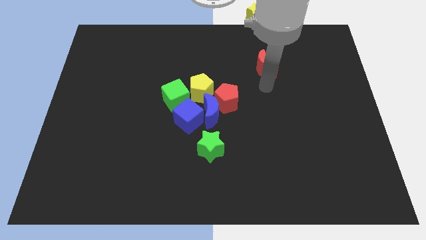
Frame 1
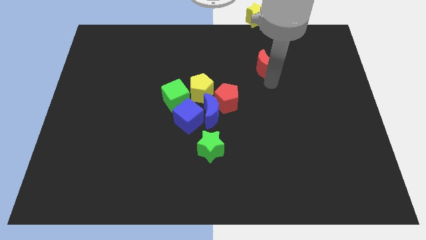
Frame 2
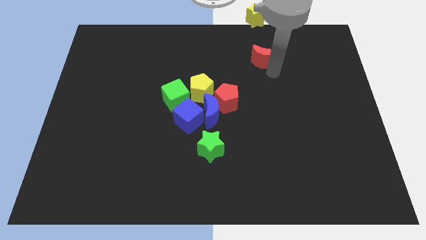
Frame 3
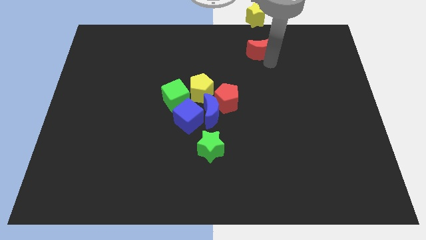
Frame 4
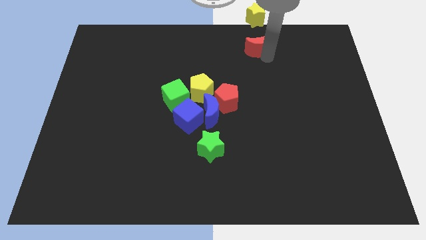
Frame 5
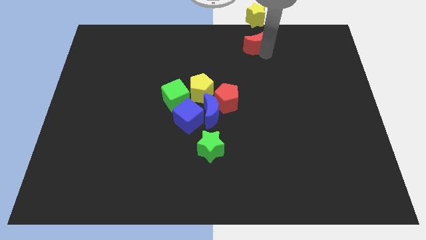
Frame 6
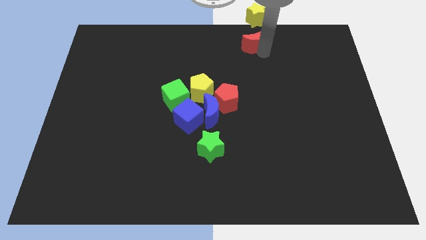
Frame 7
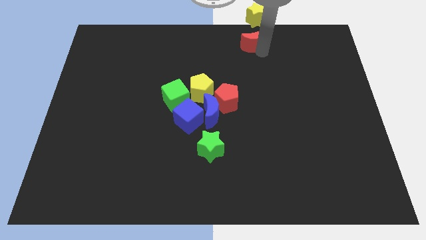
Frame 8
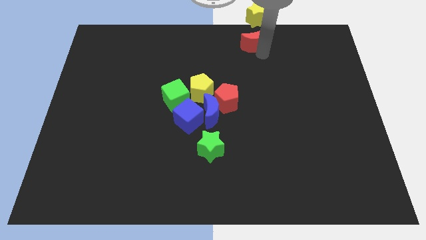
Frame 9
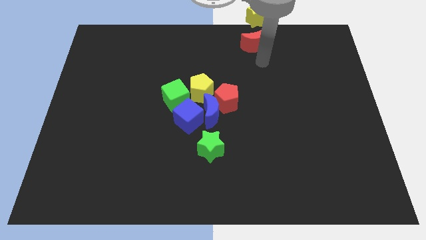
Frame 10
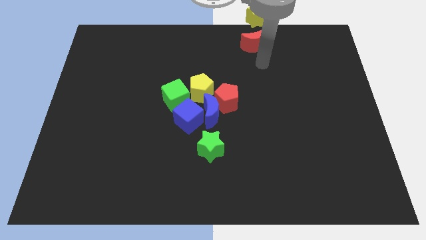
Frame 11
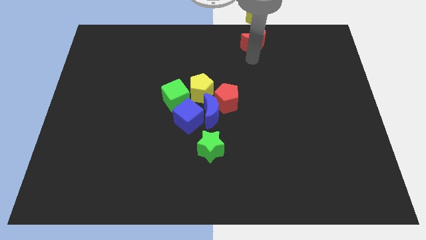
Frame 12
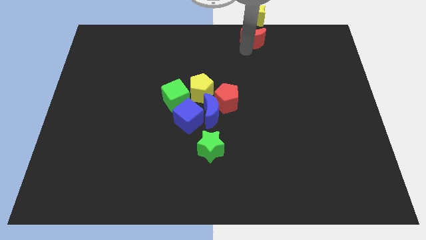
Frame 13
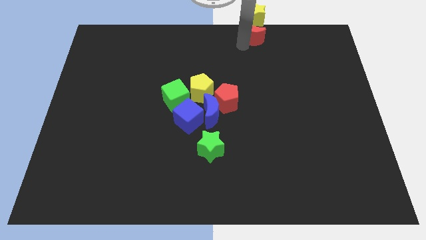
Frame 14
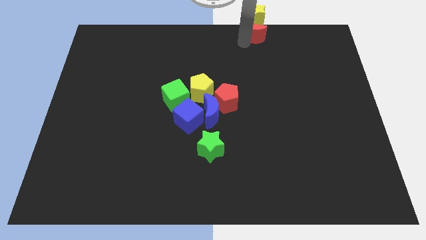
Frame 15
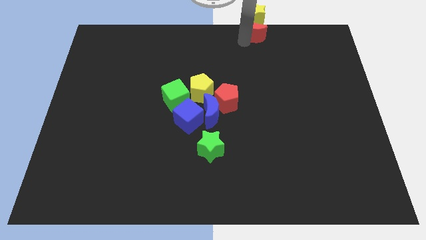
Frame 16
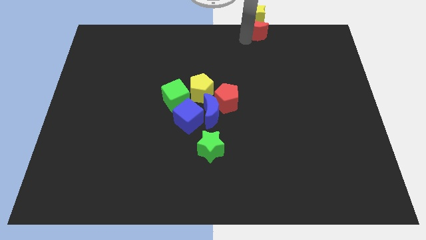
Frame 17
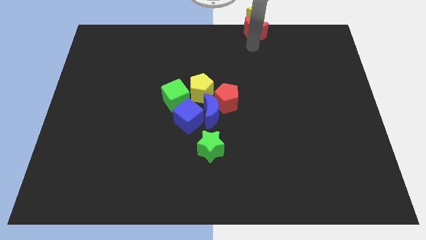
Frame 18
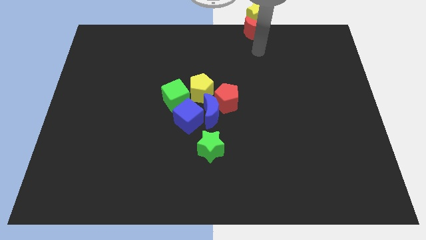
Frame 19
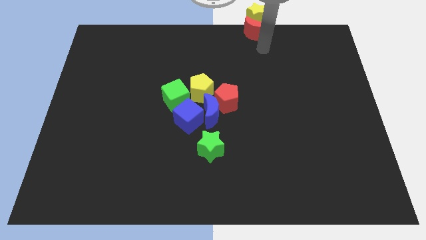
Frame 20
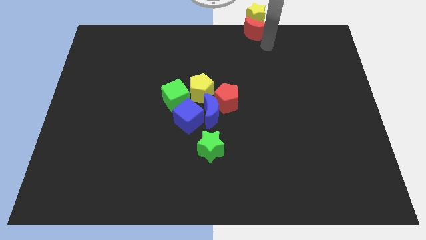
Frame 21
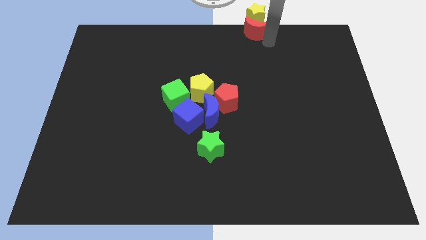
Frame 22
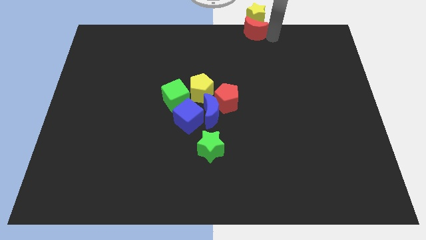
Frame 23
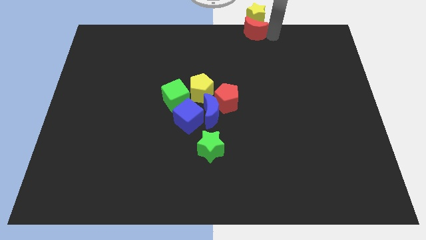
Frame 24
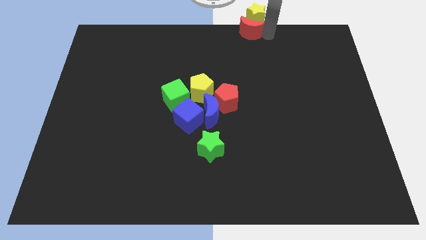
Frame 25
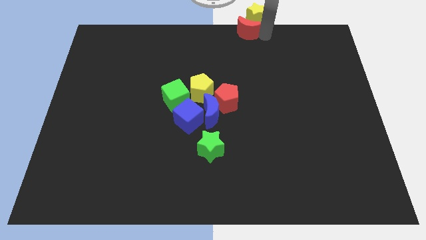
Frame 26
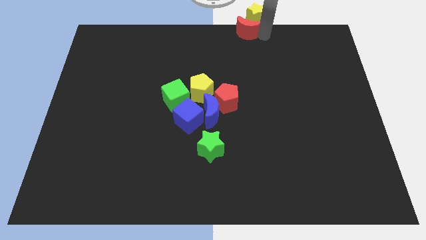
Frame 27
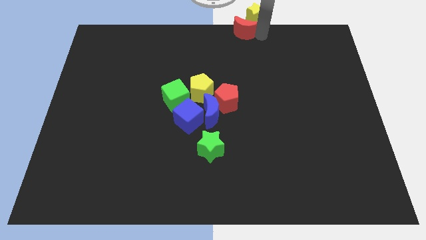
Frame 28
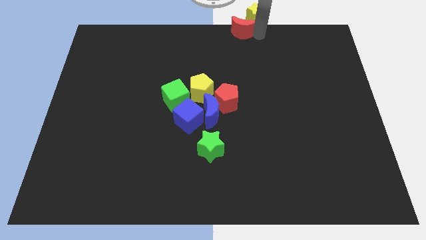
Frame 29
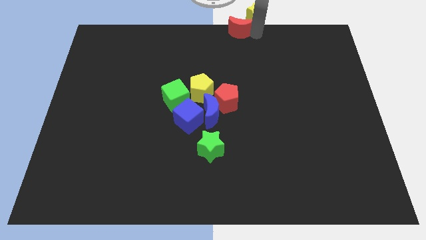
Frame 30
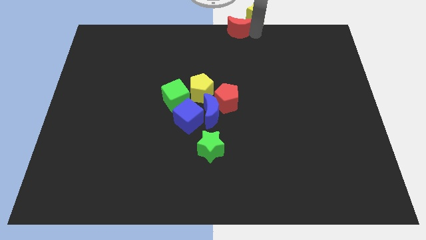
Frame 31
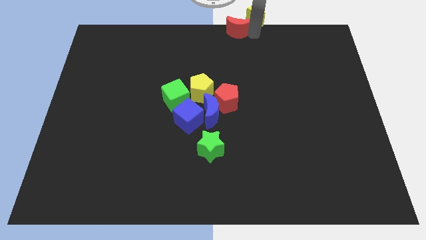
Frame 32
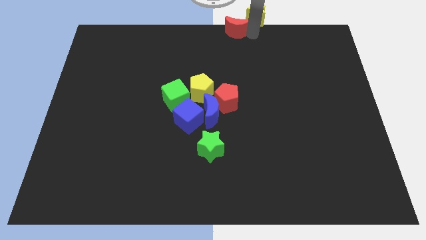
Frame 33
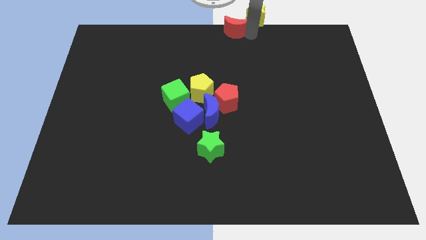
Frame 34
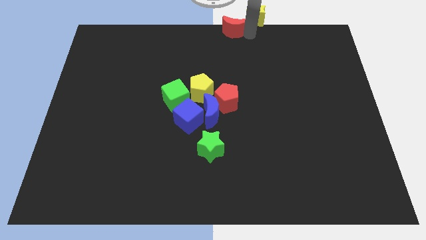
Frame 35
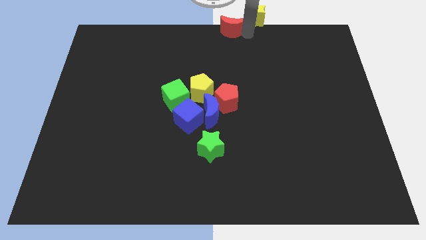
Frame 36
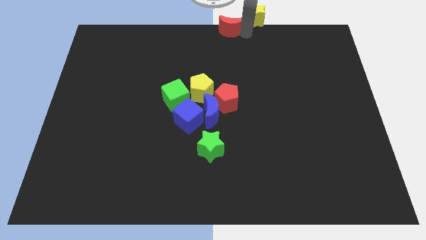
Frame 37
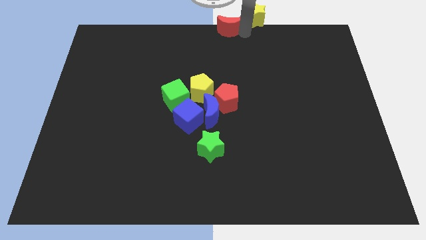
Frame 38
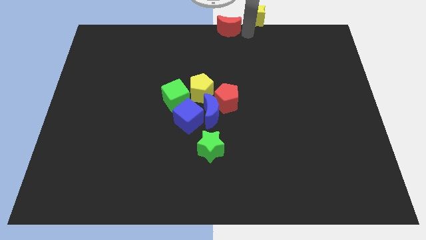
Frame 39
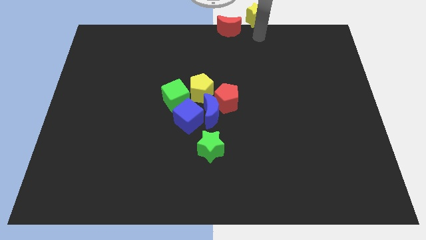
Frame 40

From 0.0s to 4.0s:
place the red crescent at the top center of the board

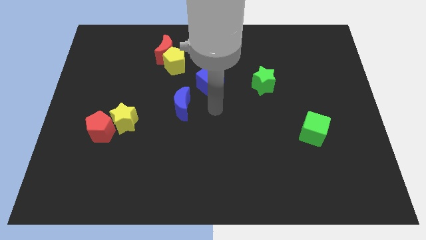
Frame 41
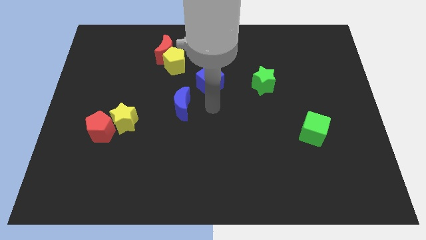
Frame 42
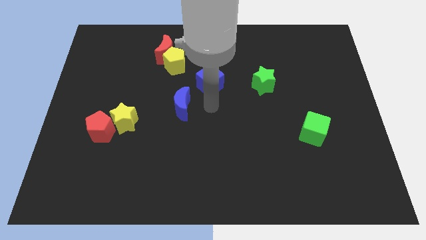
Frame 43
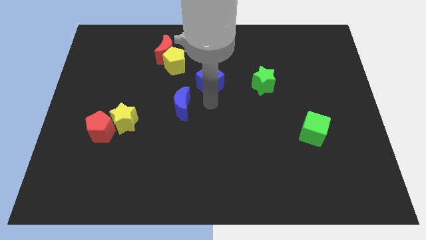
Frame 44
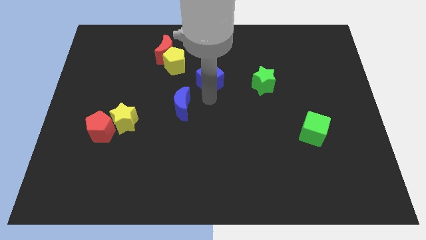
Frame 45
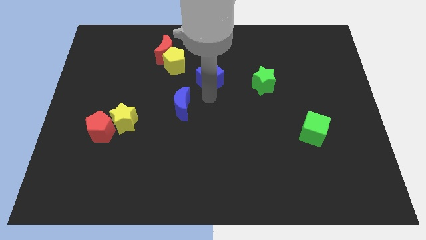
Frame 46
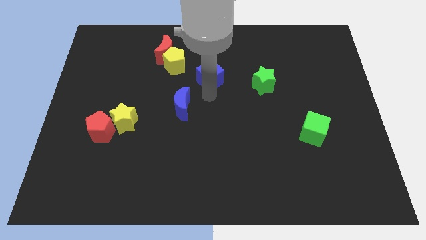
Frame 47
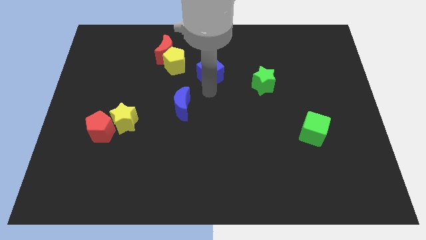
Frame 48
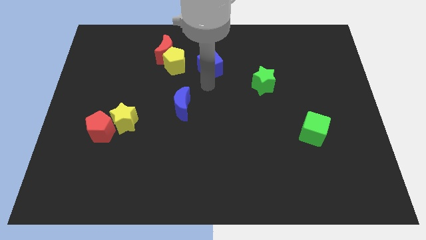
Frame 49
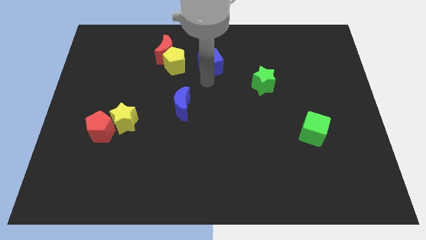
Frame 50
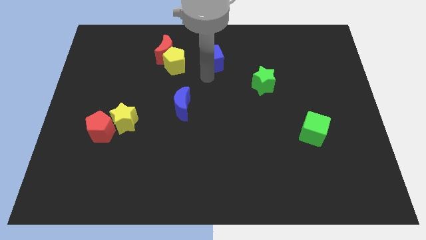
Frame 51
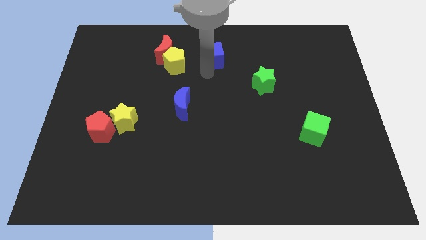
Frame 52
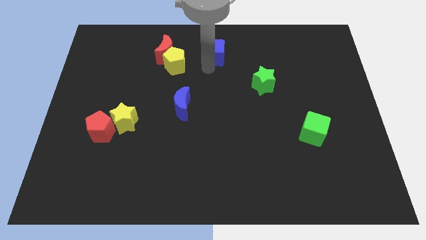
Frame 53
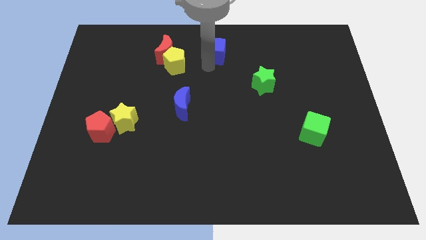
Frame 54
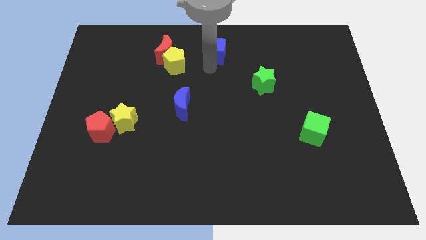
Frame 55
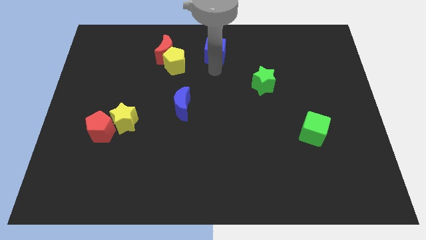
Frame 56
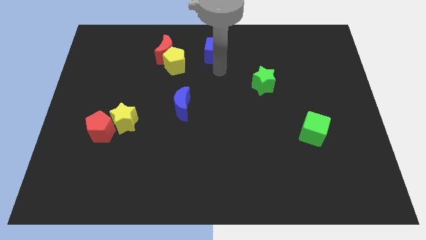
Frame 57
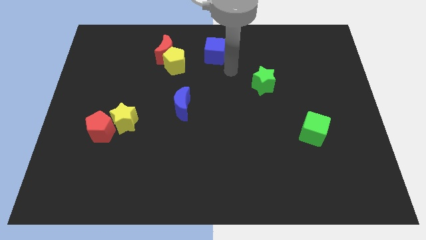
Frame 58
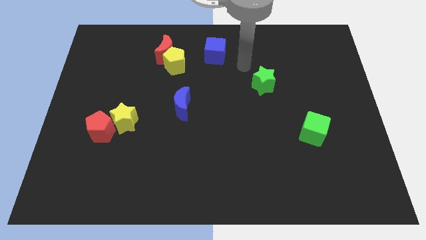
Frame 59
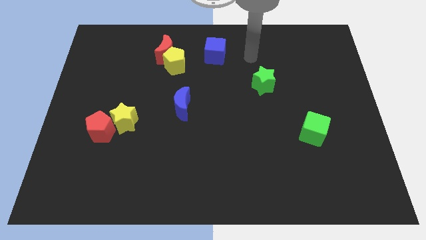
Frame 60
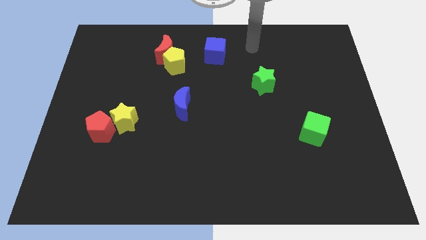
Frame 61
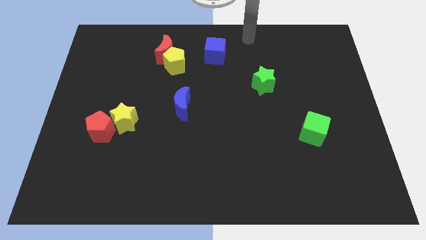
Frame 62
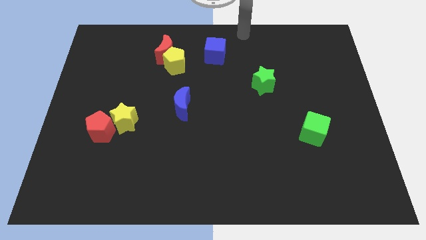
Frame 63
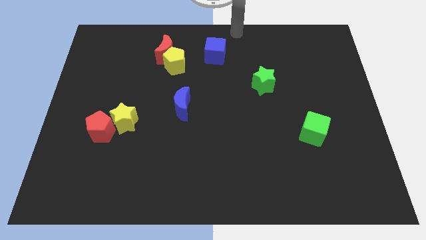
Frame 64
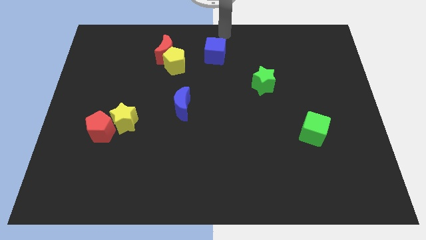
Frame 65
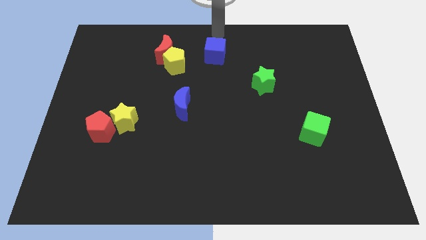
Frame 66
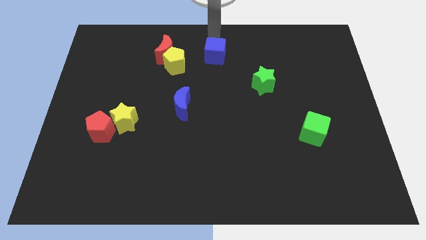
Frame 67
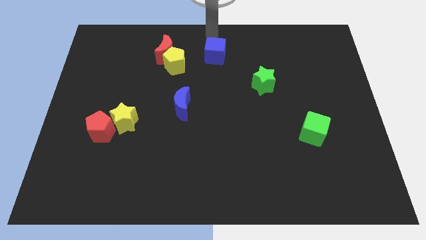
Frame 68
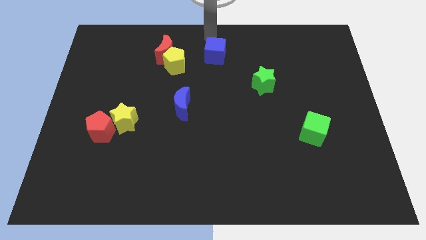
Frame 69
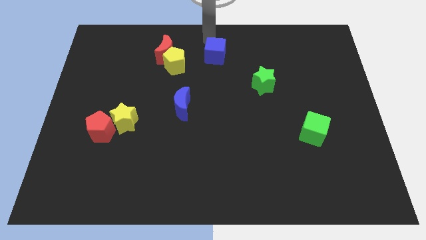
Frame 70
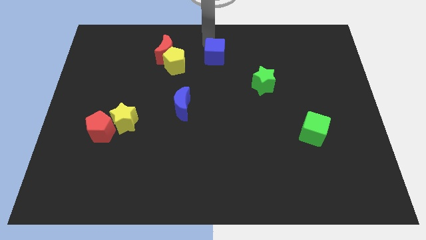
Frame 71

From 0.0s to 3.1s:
push blue cube towards top center

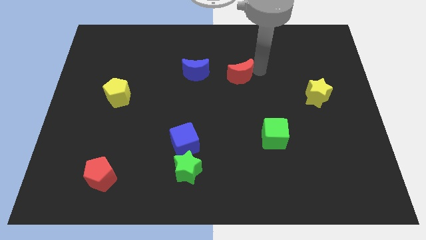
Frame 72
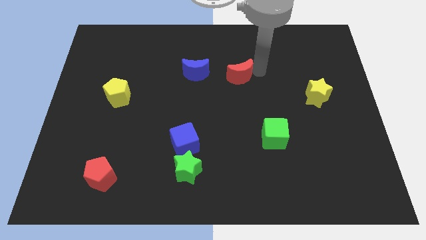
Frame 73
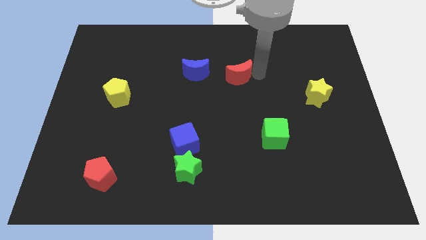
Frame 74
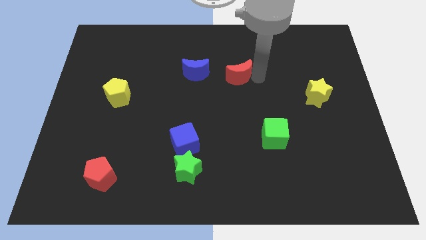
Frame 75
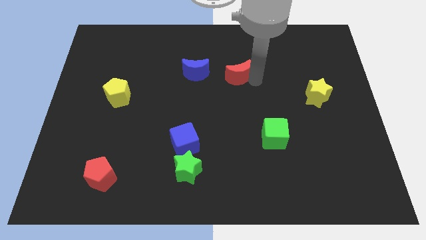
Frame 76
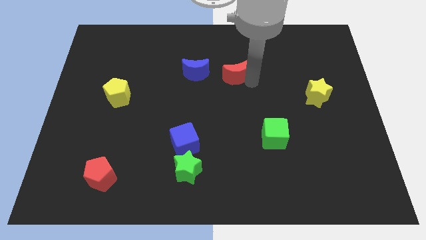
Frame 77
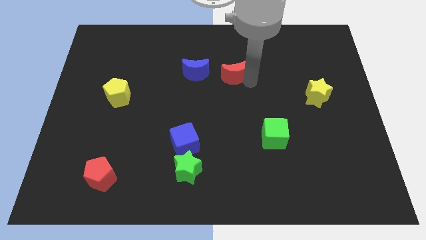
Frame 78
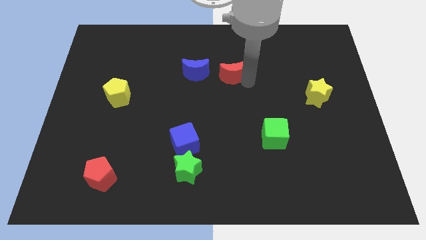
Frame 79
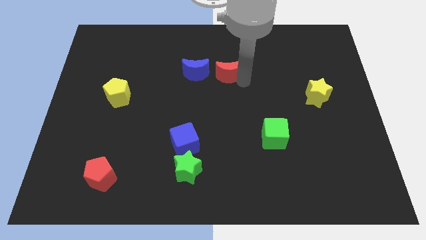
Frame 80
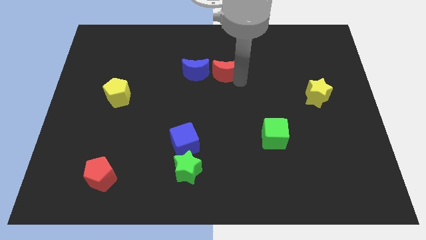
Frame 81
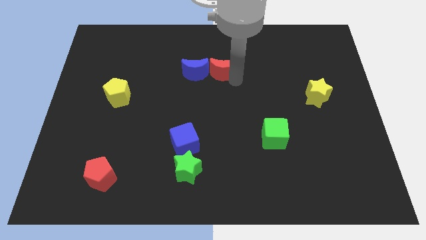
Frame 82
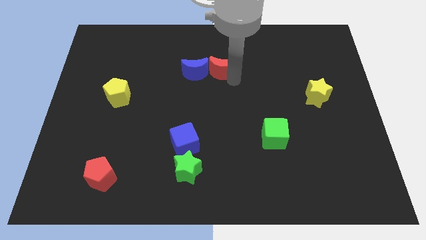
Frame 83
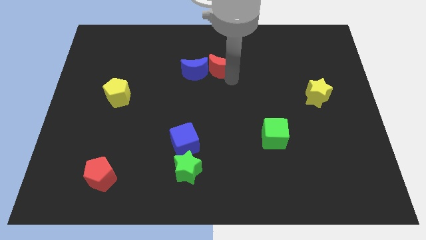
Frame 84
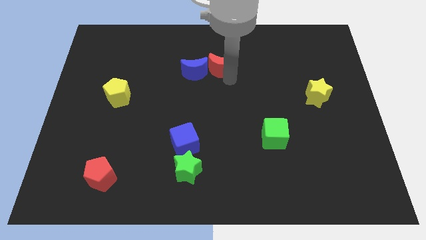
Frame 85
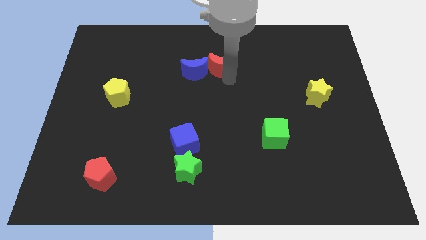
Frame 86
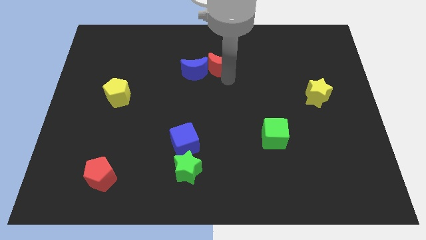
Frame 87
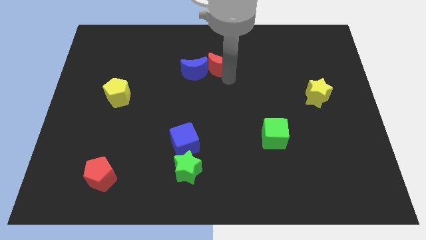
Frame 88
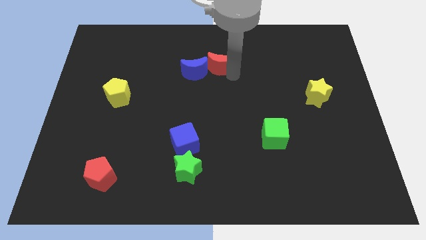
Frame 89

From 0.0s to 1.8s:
attach red moon and blue moon
